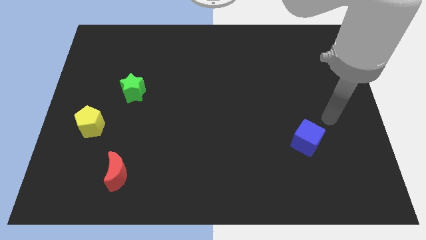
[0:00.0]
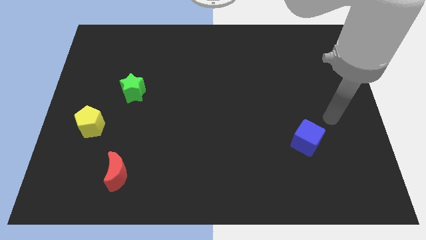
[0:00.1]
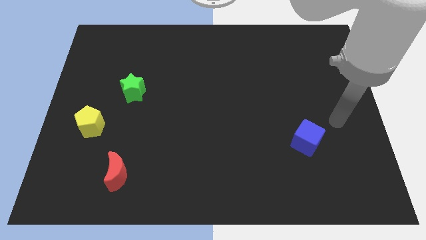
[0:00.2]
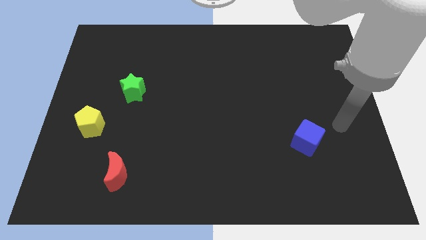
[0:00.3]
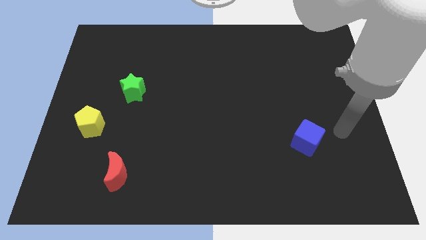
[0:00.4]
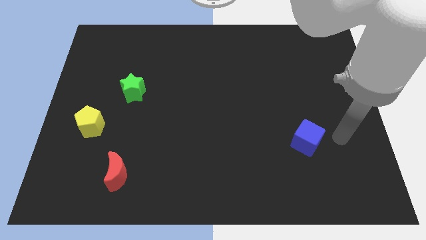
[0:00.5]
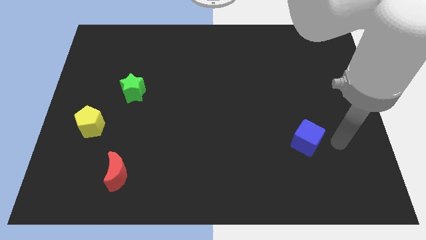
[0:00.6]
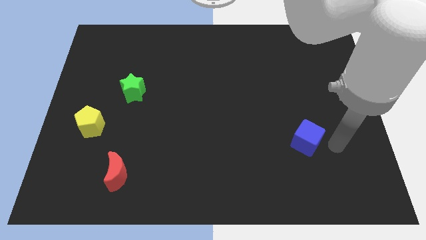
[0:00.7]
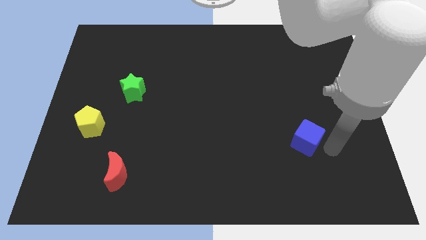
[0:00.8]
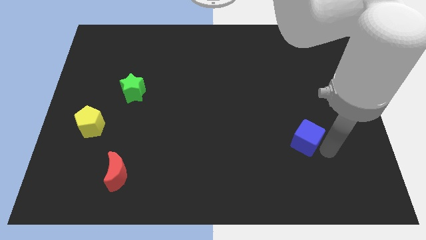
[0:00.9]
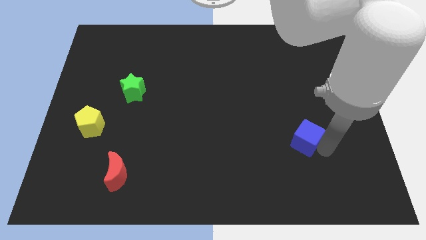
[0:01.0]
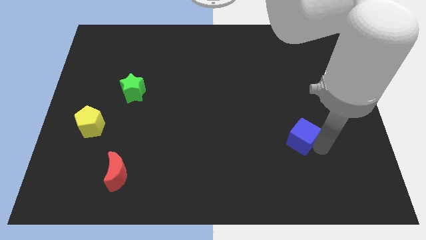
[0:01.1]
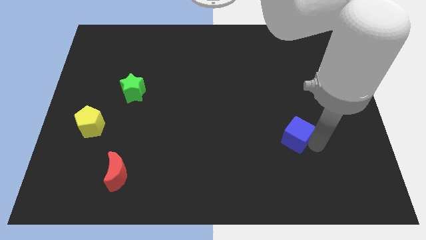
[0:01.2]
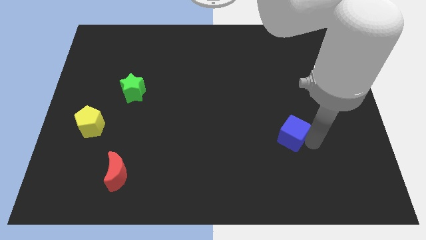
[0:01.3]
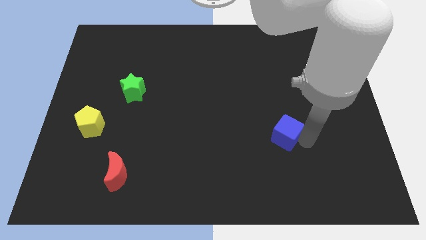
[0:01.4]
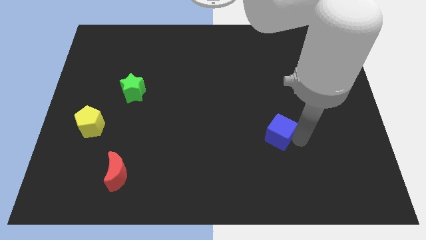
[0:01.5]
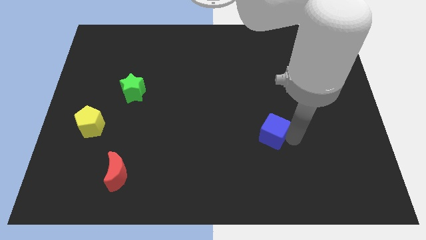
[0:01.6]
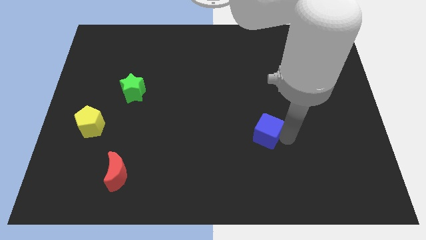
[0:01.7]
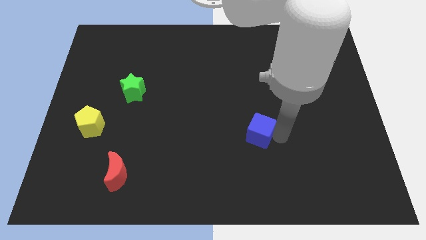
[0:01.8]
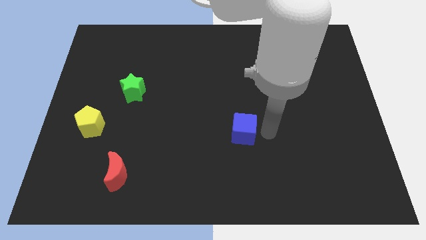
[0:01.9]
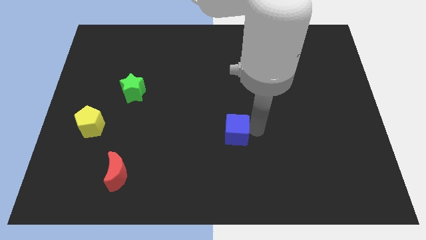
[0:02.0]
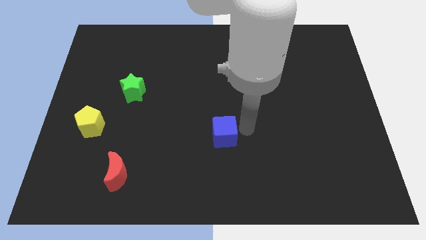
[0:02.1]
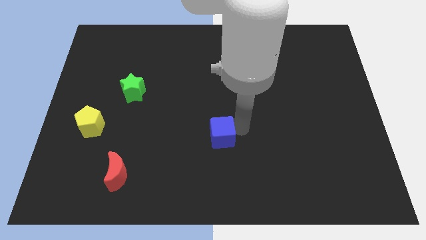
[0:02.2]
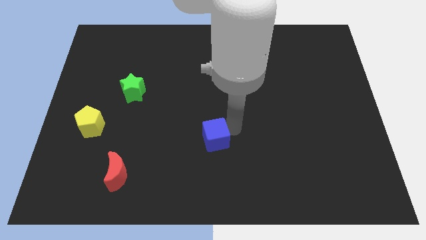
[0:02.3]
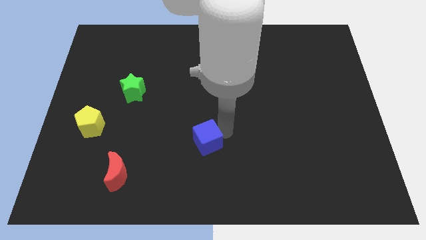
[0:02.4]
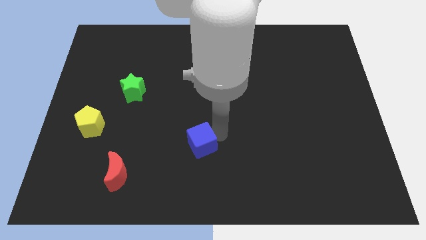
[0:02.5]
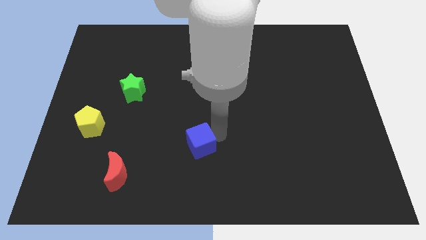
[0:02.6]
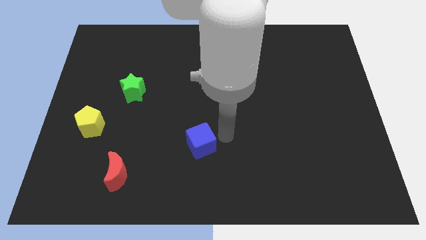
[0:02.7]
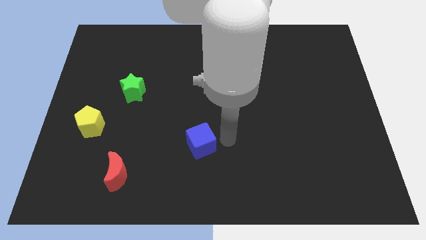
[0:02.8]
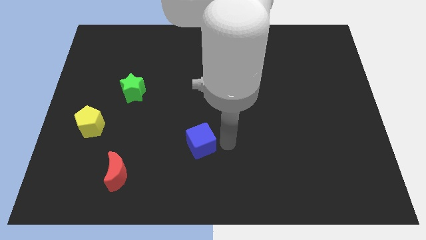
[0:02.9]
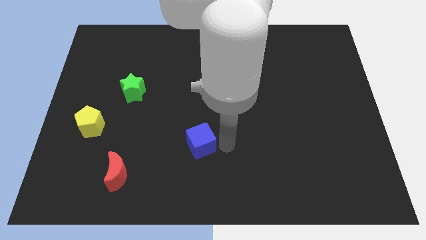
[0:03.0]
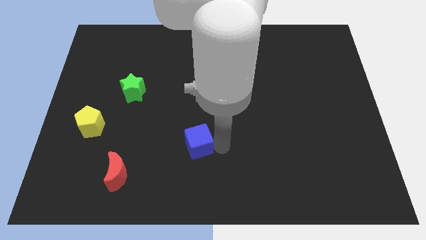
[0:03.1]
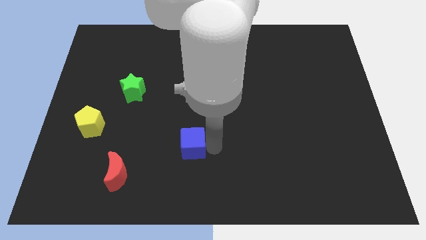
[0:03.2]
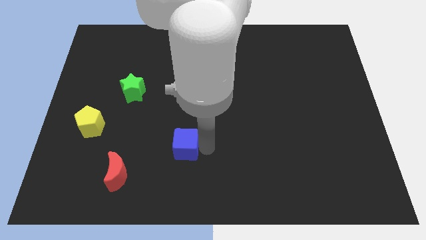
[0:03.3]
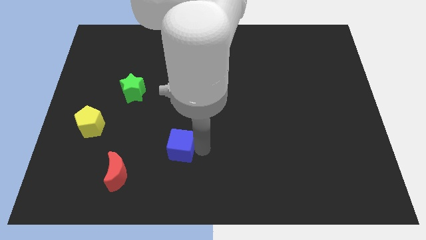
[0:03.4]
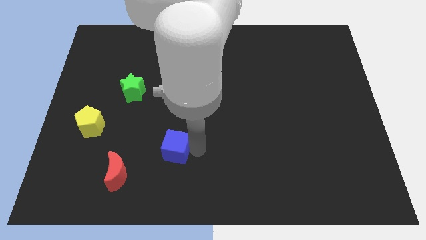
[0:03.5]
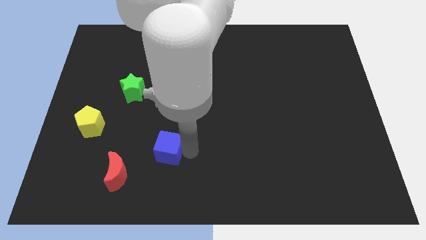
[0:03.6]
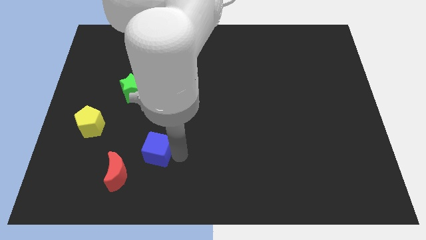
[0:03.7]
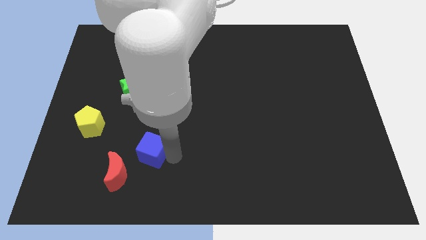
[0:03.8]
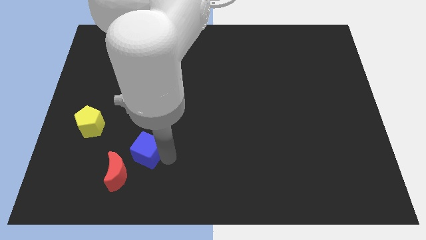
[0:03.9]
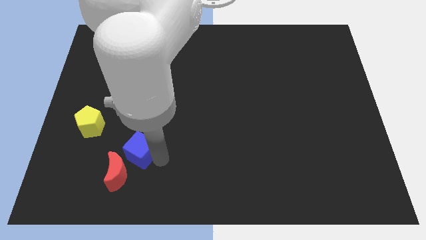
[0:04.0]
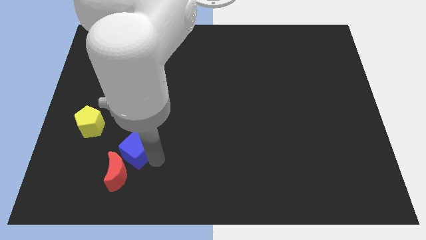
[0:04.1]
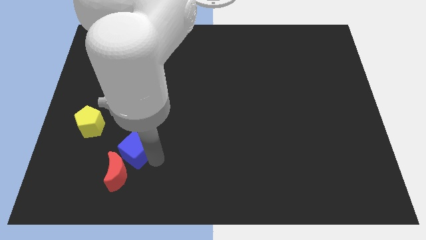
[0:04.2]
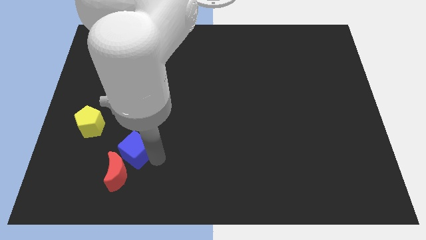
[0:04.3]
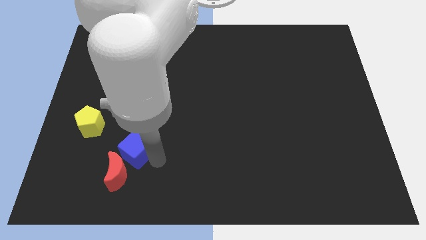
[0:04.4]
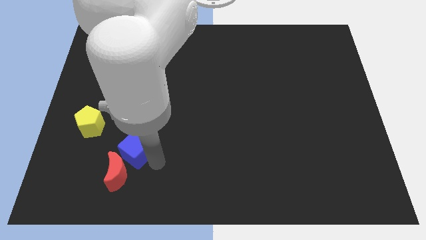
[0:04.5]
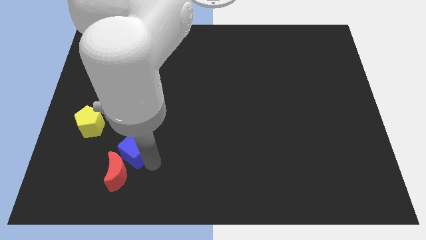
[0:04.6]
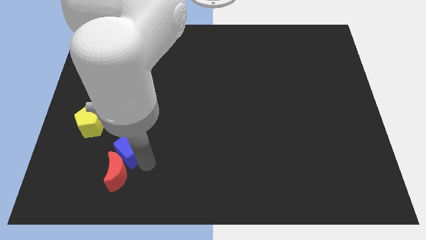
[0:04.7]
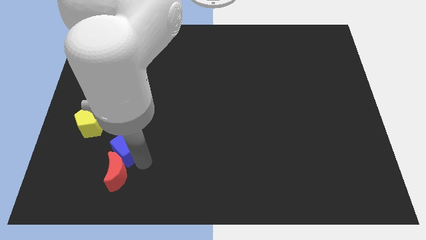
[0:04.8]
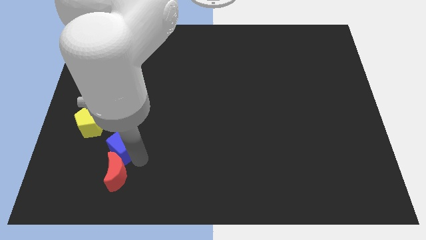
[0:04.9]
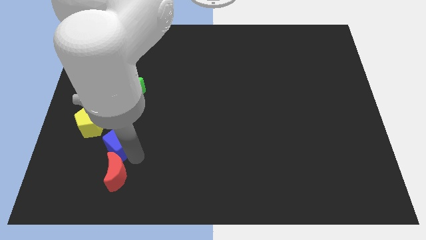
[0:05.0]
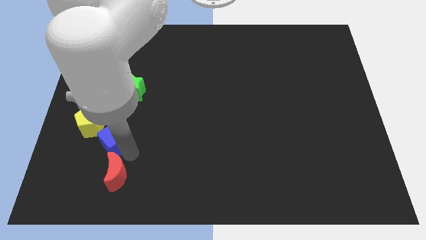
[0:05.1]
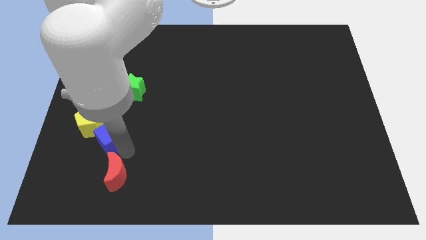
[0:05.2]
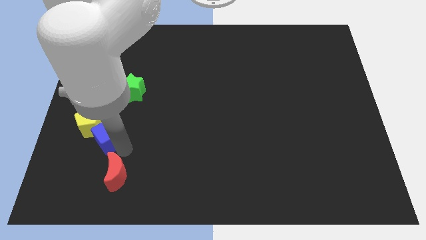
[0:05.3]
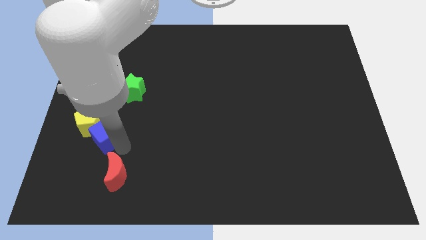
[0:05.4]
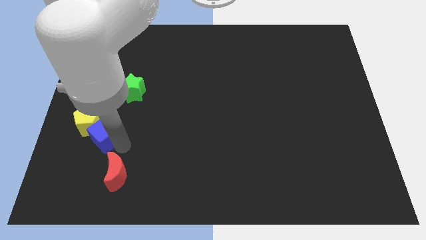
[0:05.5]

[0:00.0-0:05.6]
slide the blue cube towards the yellow pentagon

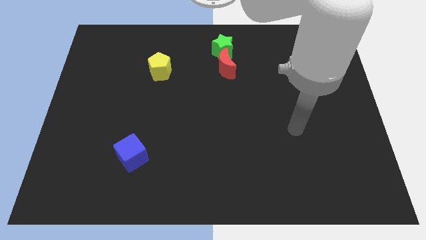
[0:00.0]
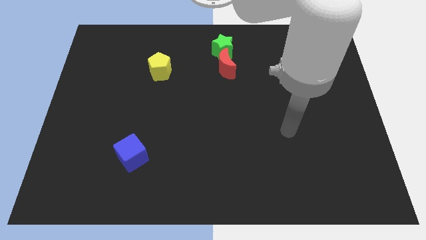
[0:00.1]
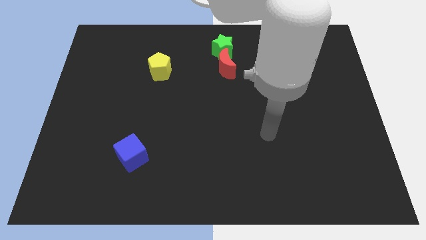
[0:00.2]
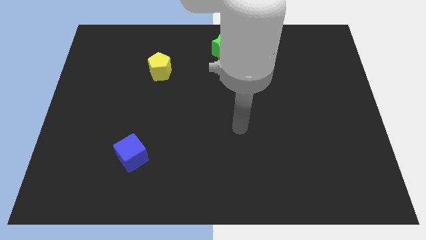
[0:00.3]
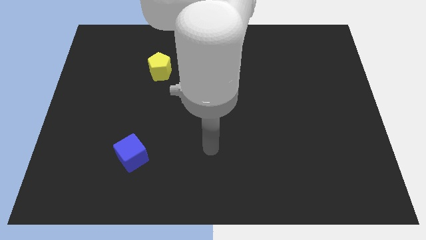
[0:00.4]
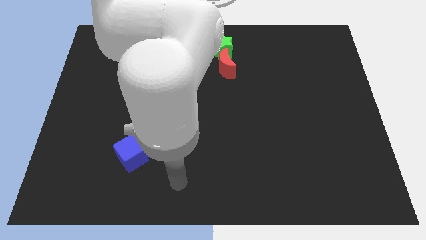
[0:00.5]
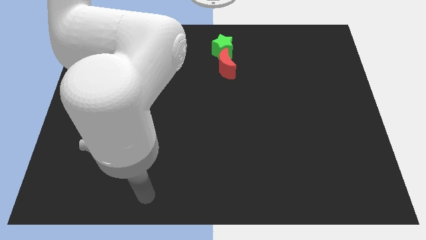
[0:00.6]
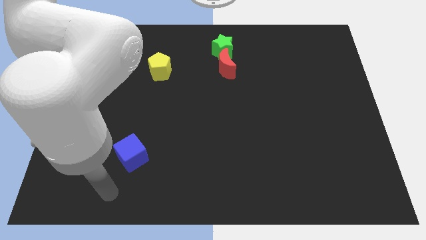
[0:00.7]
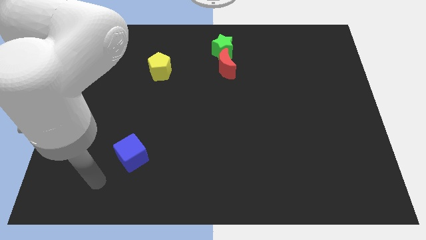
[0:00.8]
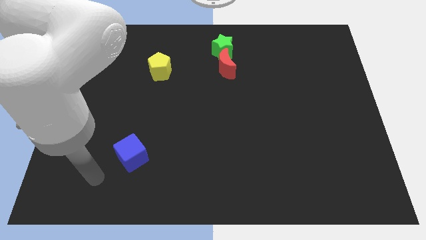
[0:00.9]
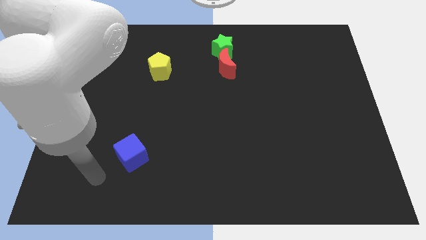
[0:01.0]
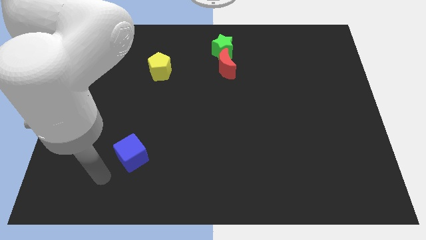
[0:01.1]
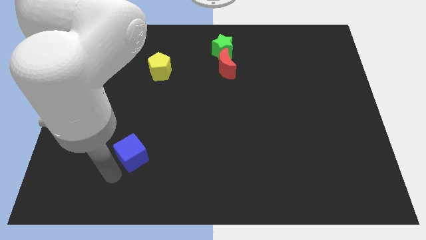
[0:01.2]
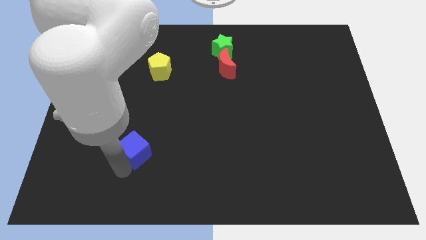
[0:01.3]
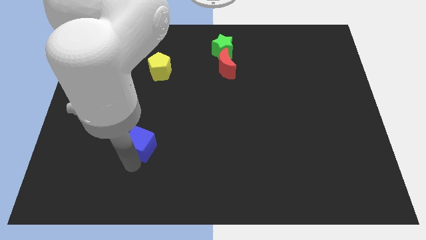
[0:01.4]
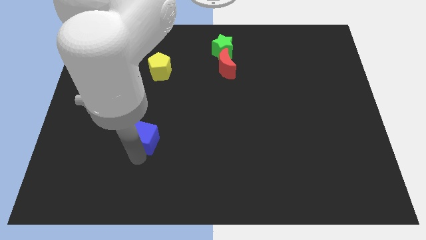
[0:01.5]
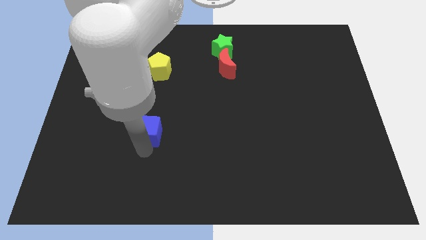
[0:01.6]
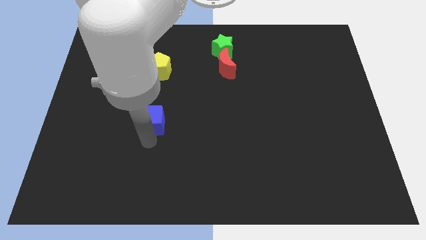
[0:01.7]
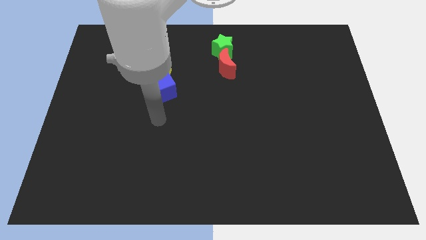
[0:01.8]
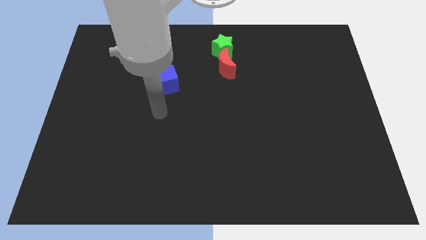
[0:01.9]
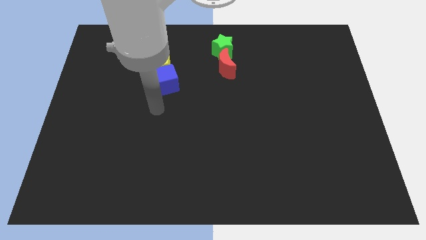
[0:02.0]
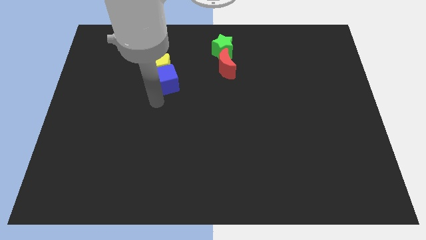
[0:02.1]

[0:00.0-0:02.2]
slide the blue cube next to the pentagon

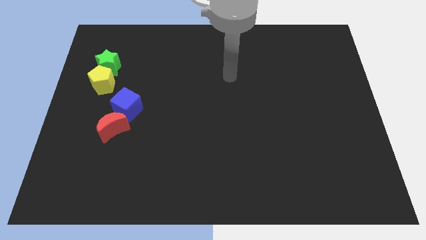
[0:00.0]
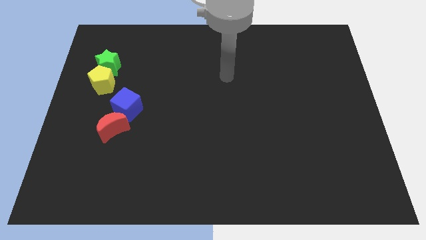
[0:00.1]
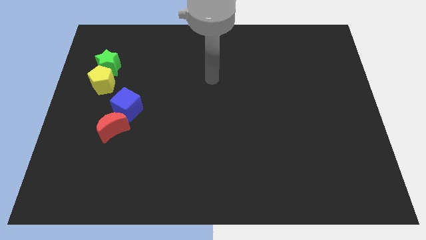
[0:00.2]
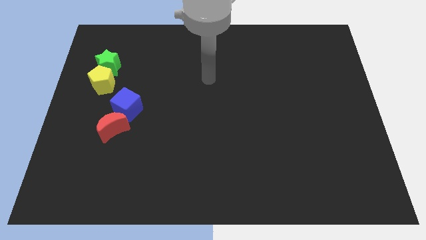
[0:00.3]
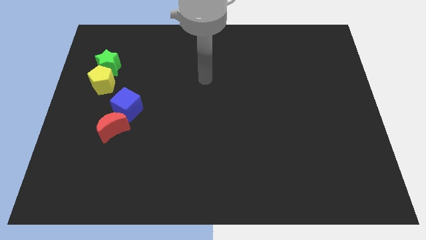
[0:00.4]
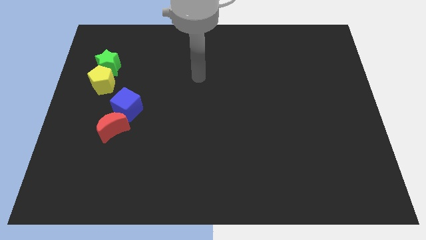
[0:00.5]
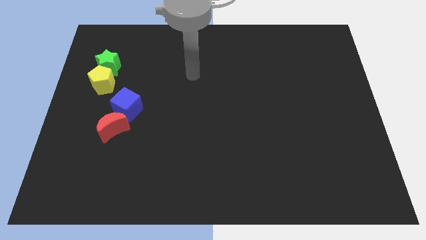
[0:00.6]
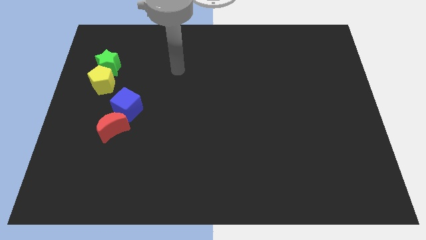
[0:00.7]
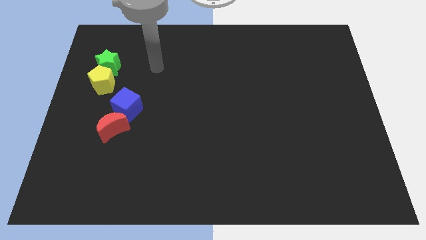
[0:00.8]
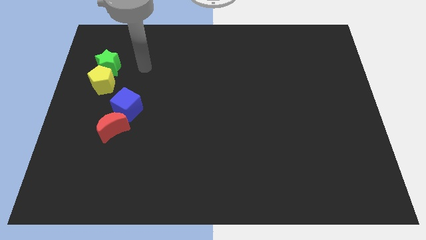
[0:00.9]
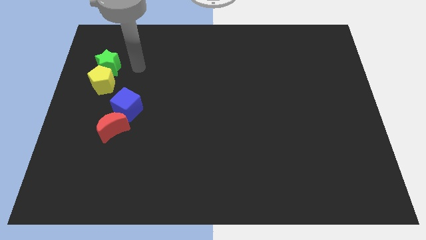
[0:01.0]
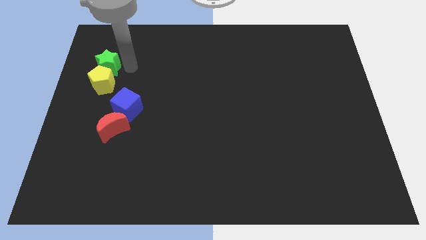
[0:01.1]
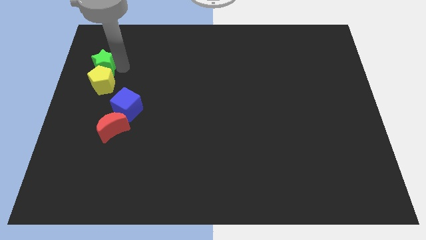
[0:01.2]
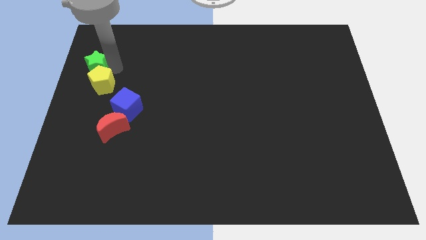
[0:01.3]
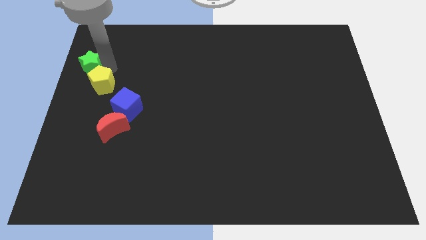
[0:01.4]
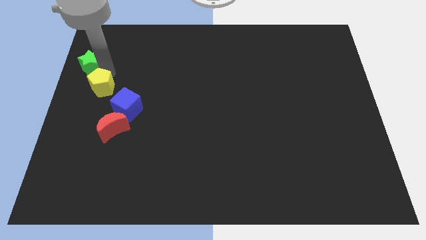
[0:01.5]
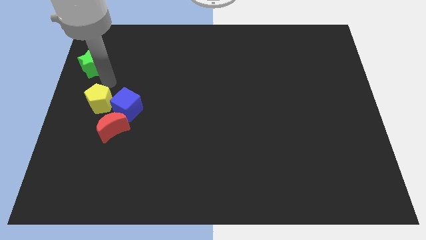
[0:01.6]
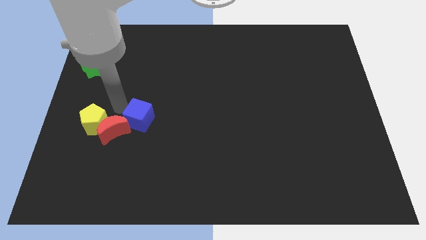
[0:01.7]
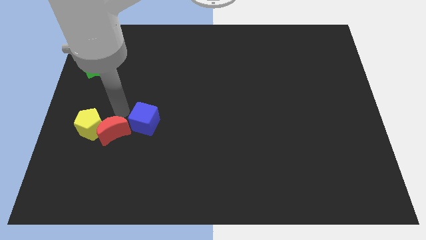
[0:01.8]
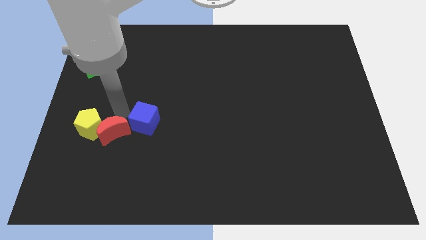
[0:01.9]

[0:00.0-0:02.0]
put the pentagon close to the moon
